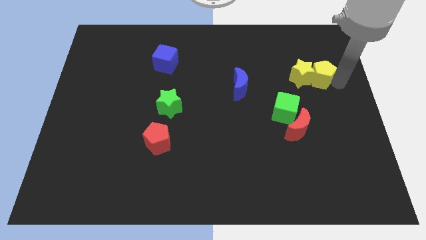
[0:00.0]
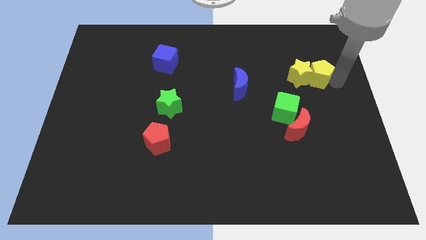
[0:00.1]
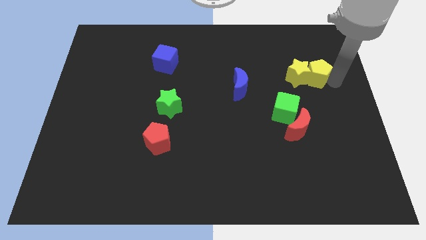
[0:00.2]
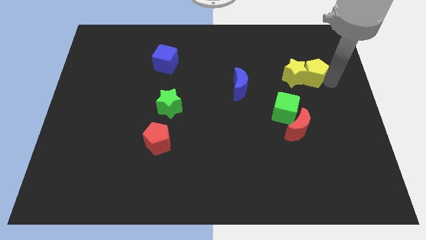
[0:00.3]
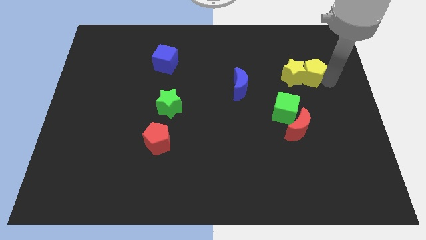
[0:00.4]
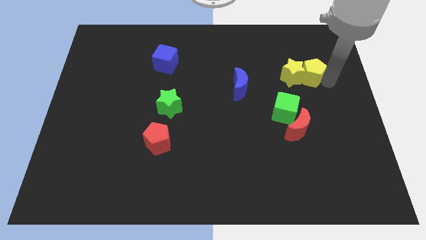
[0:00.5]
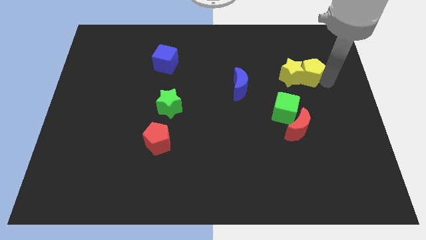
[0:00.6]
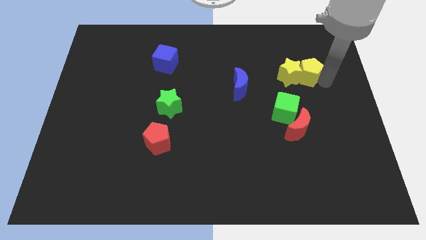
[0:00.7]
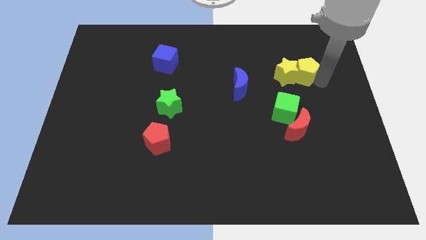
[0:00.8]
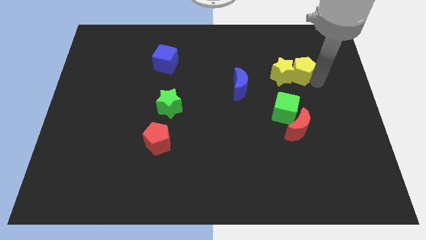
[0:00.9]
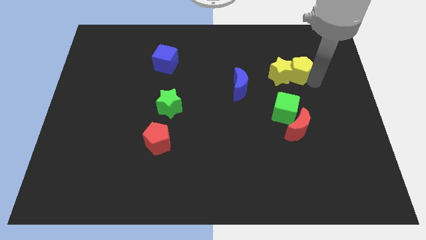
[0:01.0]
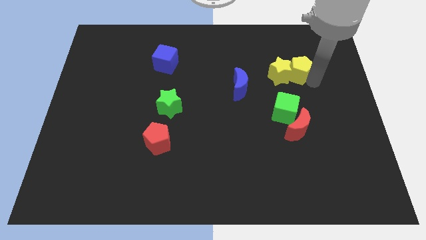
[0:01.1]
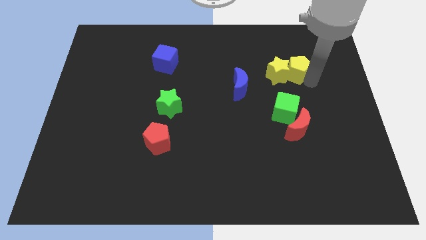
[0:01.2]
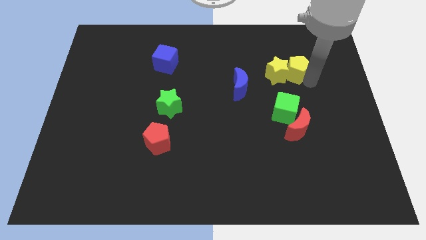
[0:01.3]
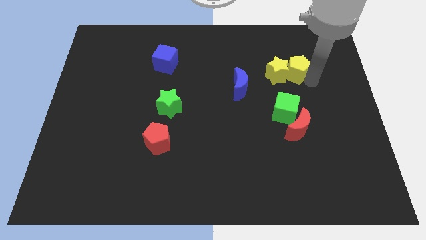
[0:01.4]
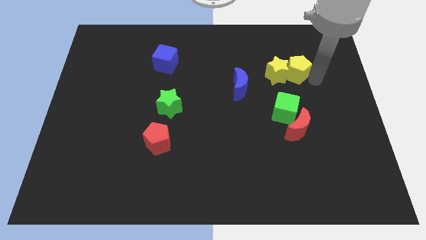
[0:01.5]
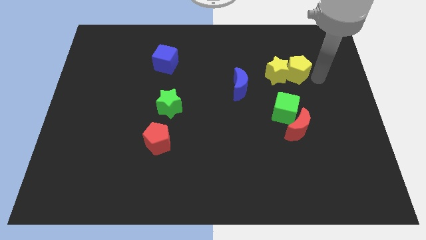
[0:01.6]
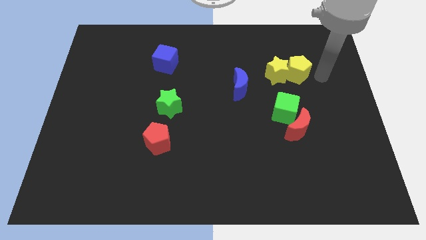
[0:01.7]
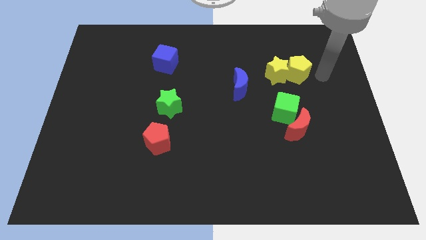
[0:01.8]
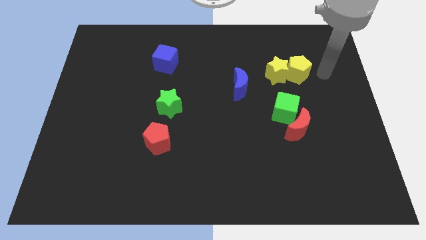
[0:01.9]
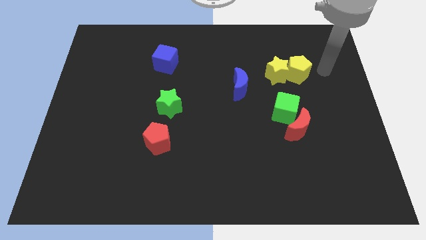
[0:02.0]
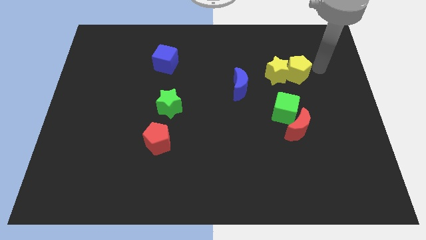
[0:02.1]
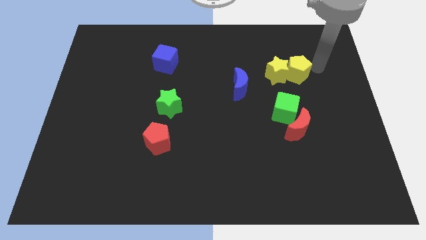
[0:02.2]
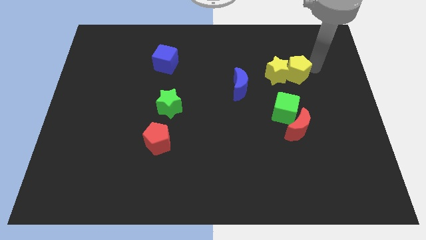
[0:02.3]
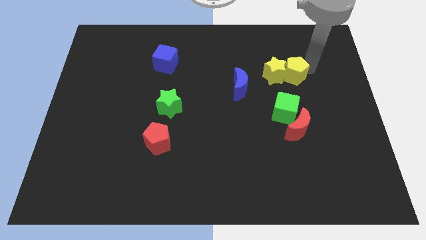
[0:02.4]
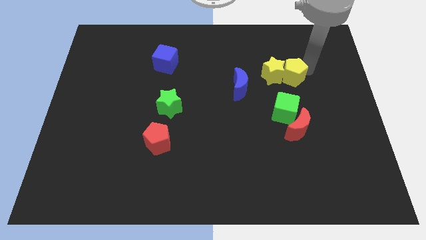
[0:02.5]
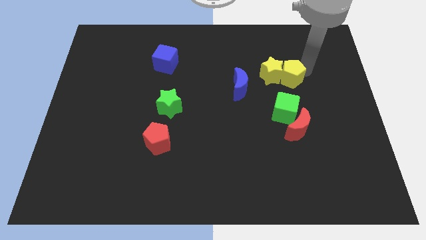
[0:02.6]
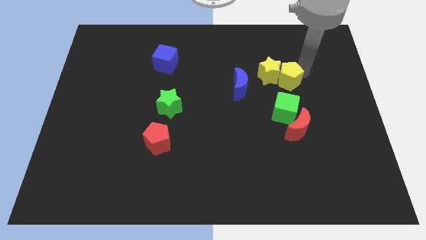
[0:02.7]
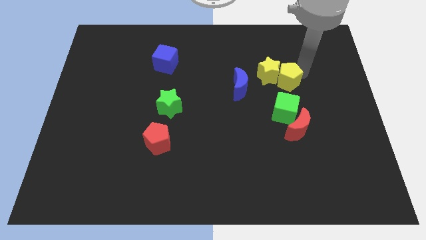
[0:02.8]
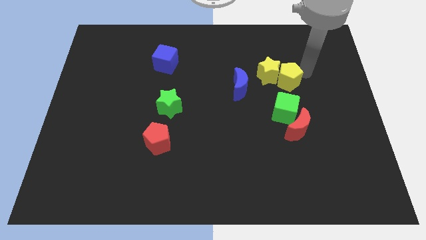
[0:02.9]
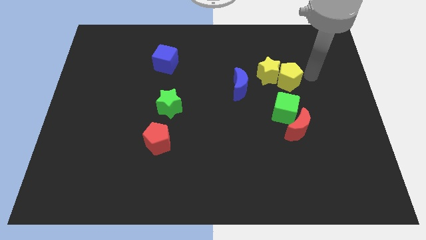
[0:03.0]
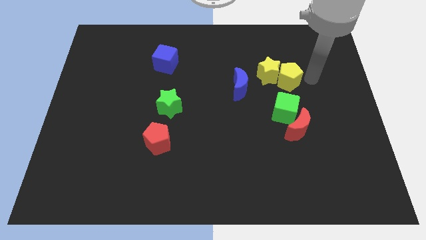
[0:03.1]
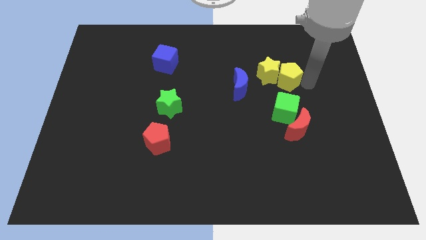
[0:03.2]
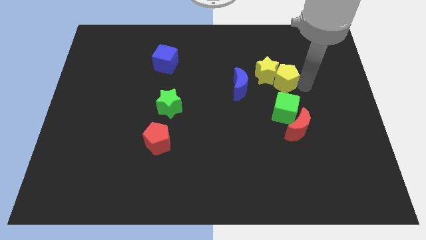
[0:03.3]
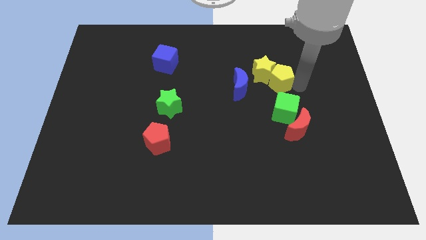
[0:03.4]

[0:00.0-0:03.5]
place the yellow pentagon above the green cube

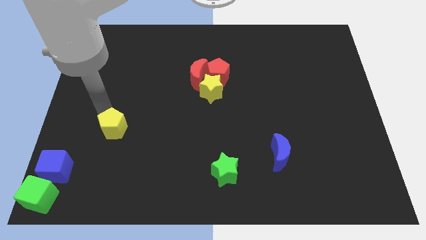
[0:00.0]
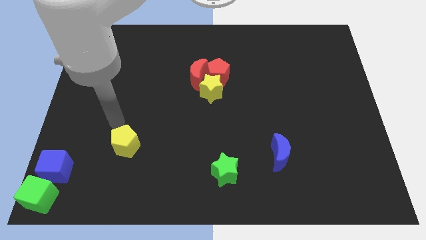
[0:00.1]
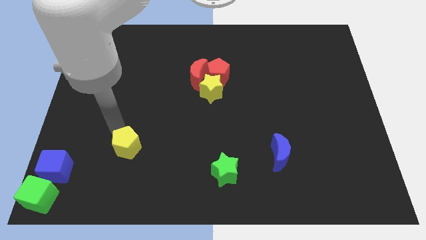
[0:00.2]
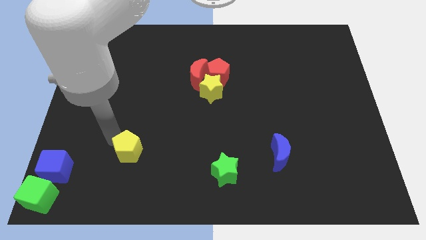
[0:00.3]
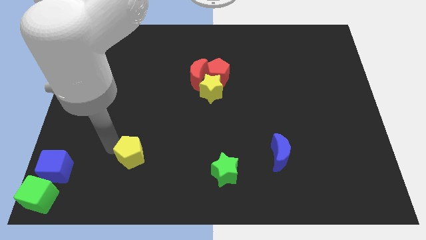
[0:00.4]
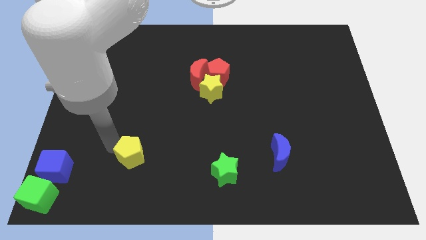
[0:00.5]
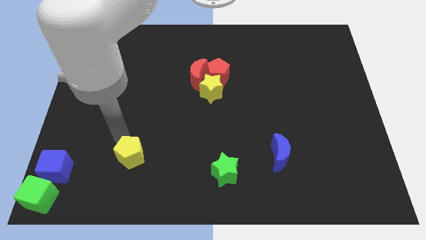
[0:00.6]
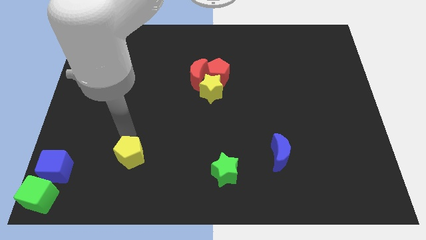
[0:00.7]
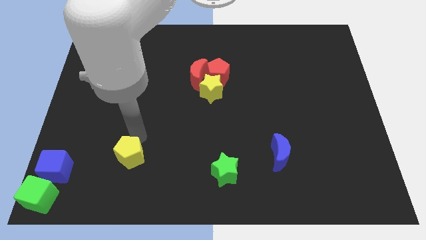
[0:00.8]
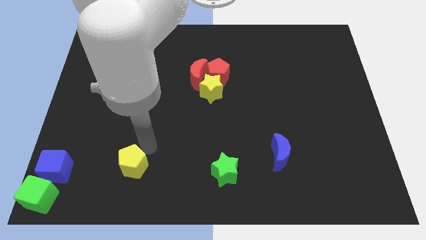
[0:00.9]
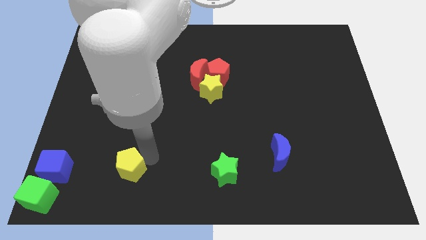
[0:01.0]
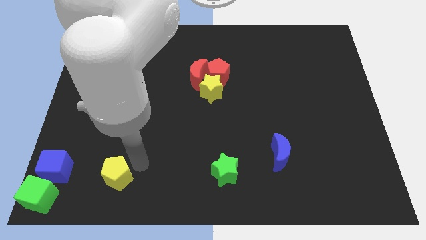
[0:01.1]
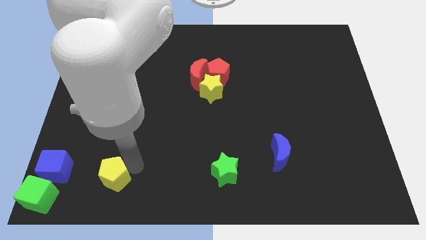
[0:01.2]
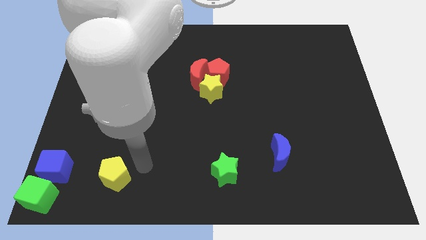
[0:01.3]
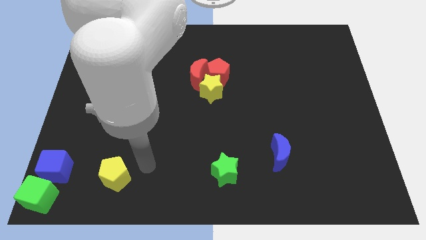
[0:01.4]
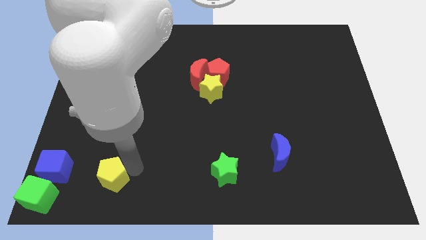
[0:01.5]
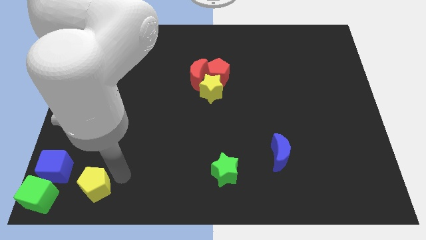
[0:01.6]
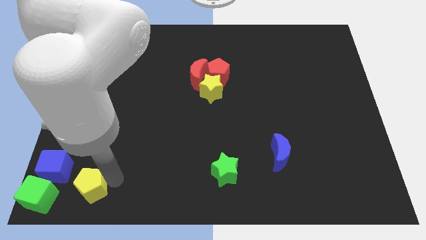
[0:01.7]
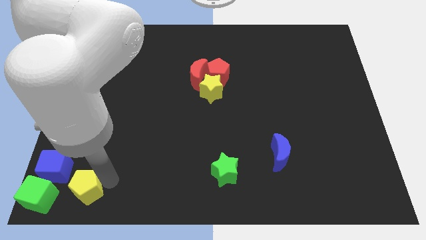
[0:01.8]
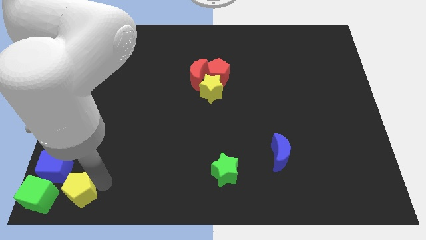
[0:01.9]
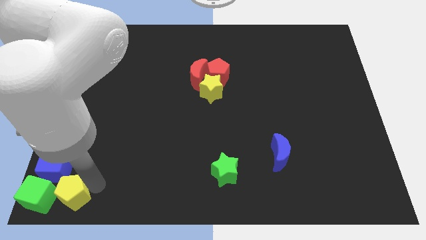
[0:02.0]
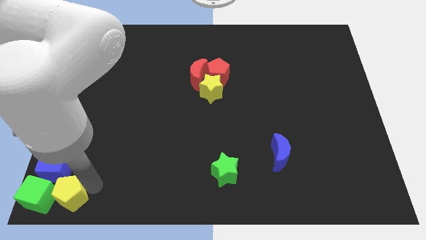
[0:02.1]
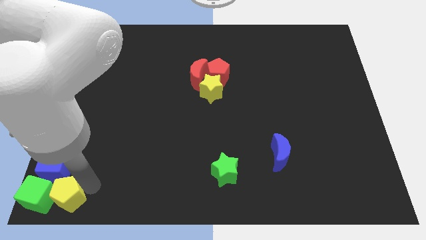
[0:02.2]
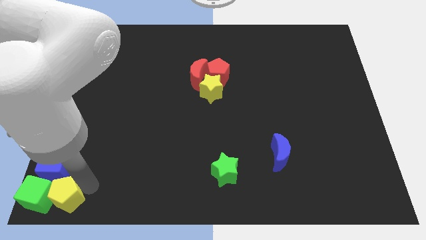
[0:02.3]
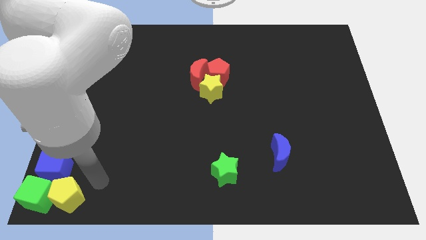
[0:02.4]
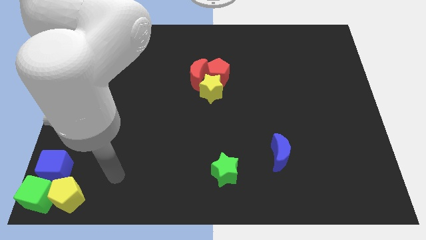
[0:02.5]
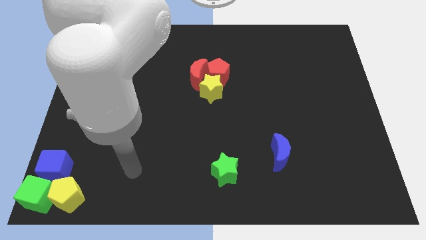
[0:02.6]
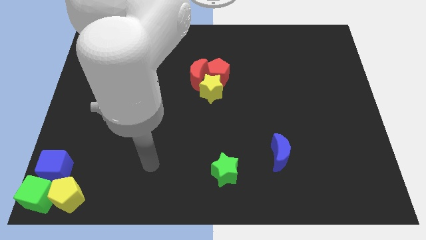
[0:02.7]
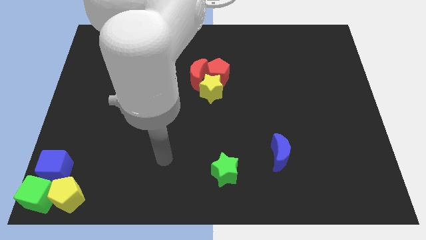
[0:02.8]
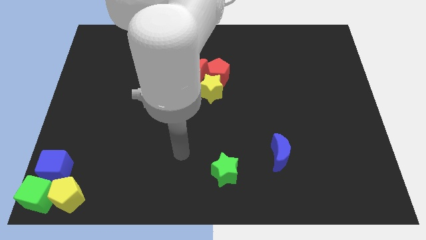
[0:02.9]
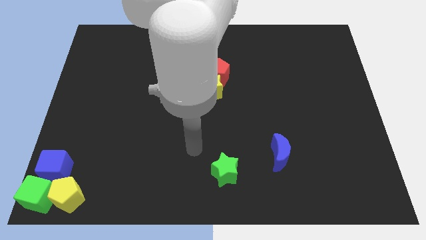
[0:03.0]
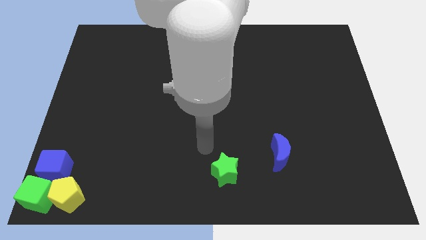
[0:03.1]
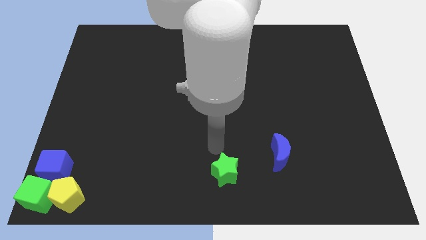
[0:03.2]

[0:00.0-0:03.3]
push the yellow pentagon into the green cube

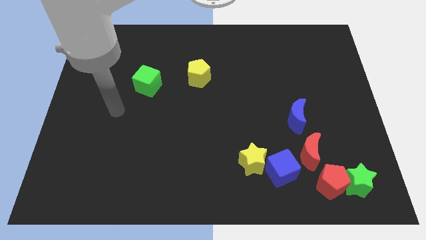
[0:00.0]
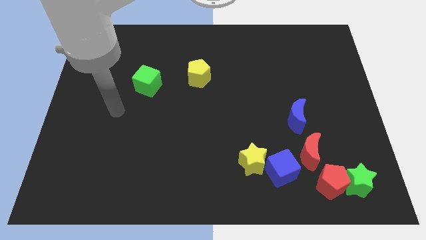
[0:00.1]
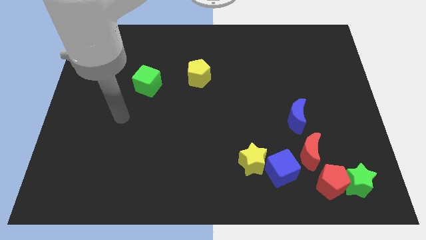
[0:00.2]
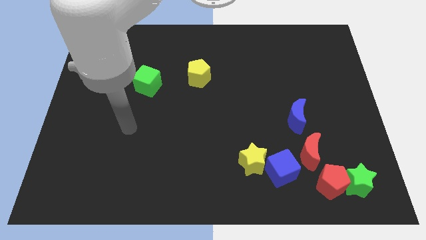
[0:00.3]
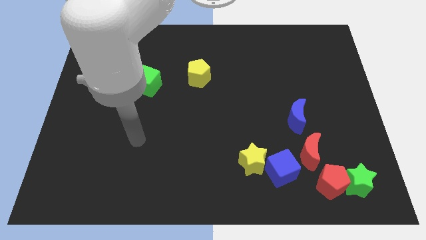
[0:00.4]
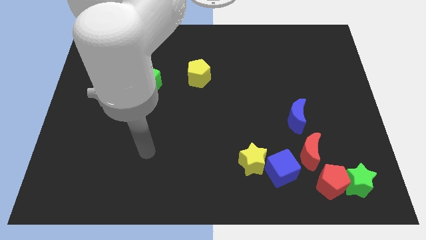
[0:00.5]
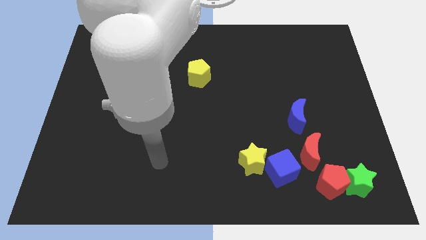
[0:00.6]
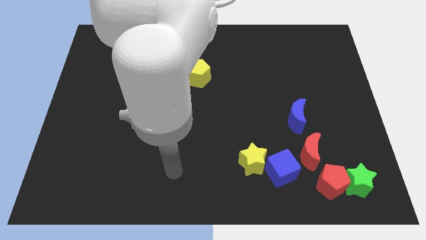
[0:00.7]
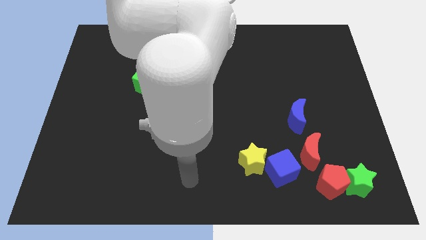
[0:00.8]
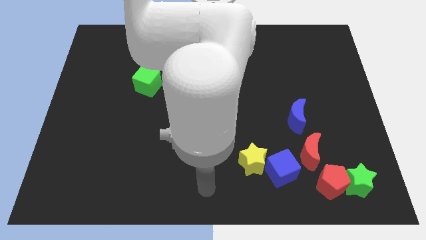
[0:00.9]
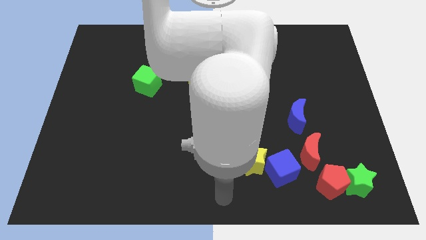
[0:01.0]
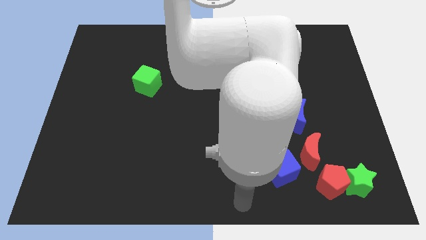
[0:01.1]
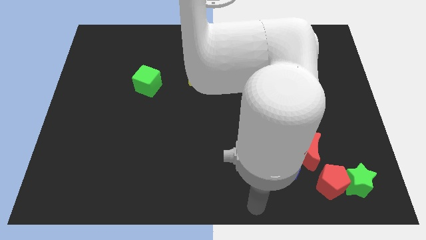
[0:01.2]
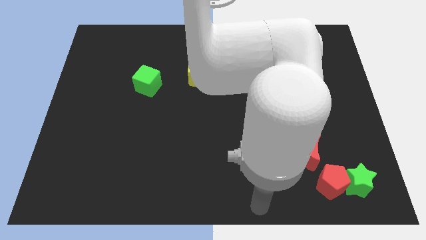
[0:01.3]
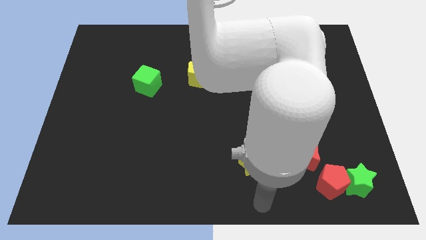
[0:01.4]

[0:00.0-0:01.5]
move the arm to the bottom of the blue cube

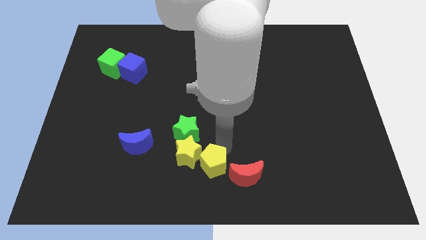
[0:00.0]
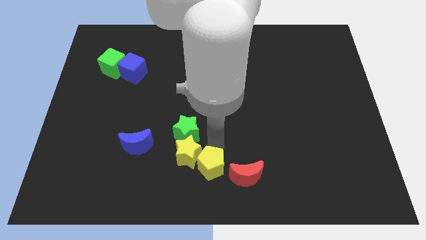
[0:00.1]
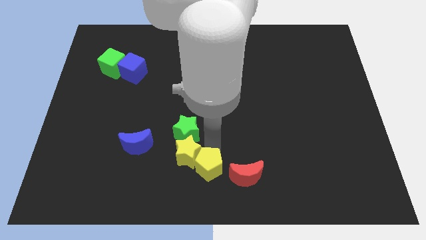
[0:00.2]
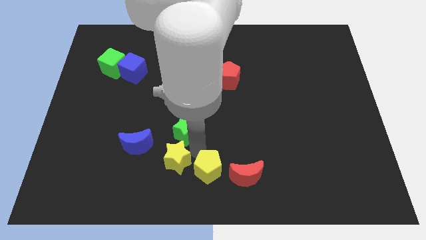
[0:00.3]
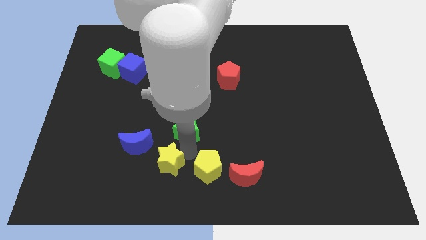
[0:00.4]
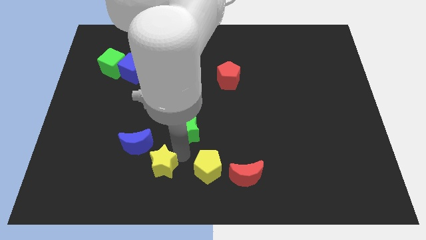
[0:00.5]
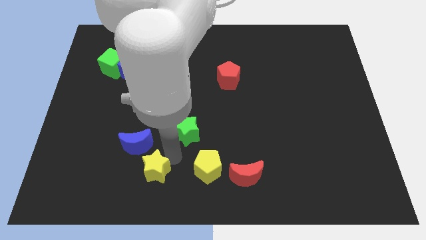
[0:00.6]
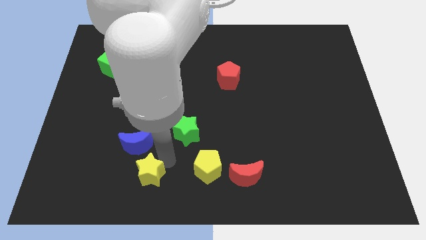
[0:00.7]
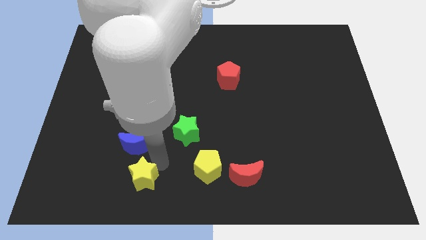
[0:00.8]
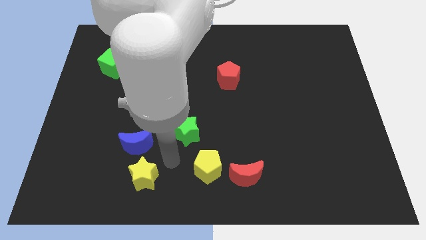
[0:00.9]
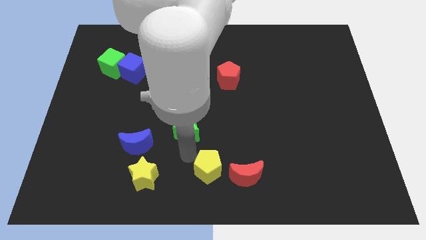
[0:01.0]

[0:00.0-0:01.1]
separate yellow pentagon and yellow star
